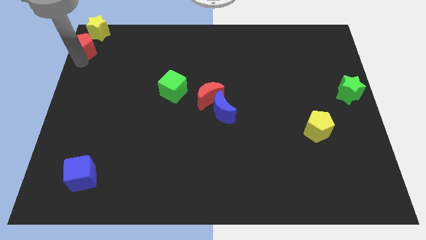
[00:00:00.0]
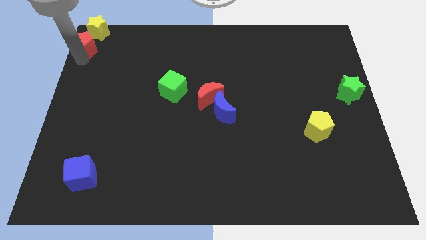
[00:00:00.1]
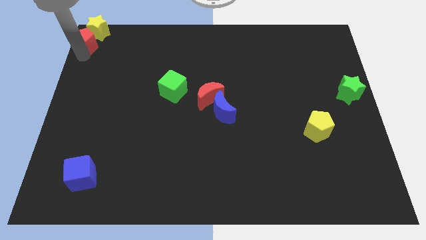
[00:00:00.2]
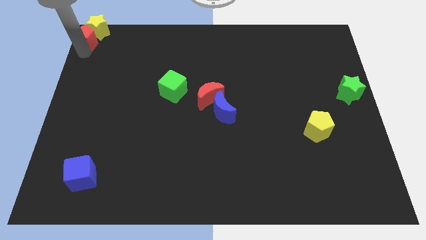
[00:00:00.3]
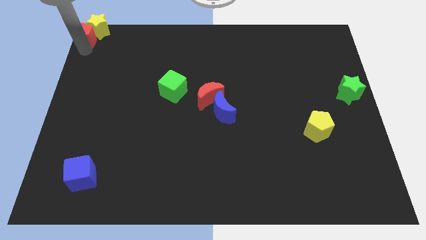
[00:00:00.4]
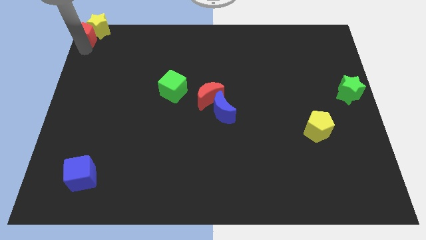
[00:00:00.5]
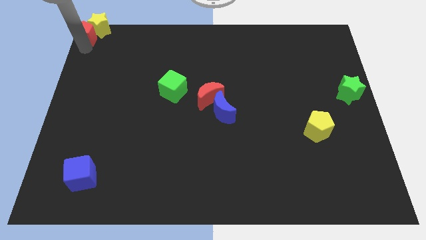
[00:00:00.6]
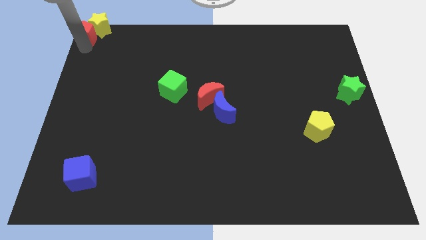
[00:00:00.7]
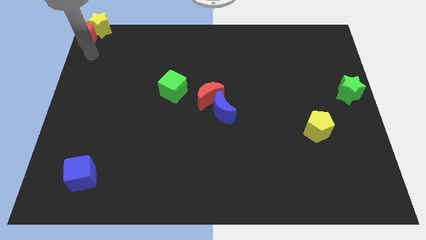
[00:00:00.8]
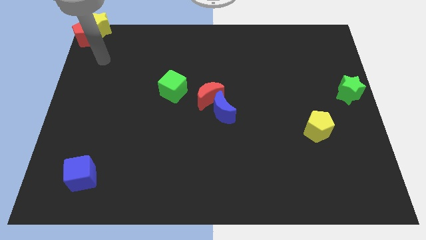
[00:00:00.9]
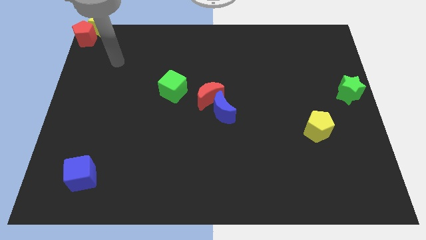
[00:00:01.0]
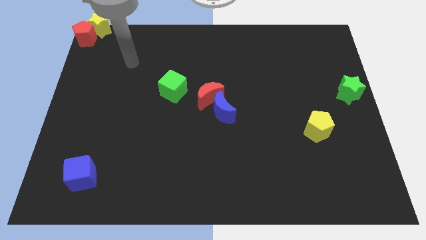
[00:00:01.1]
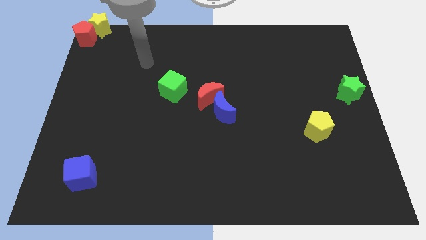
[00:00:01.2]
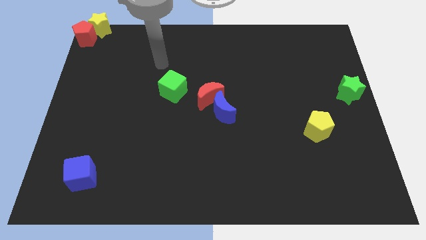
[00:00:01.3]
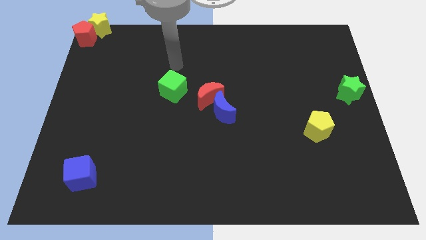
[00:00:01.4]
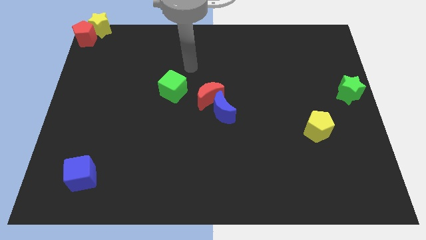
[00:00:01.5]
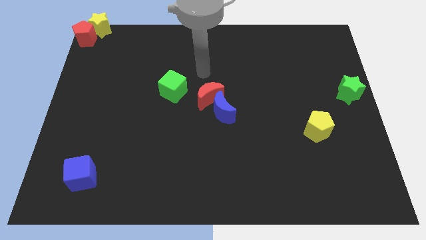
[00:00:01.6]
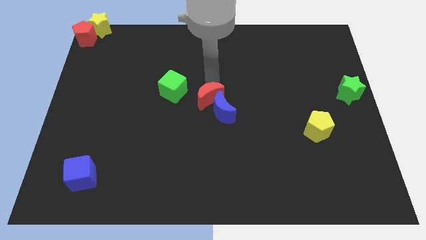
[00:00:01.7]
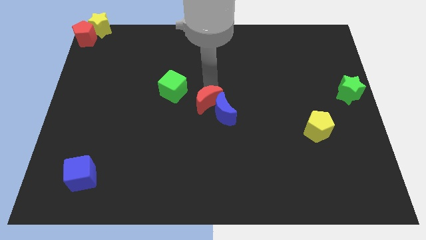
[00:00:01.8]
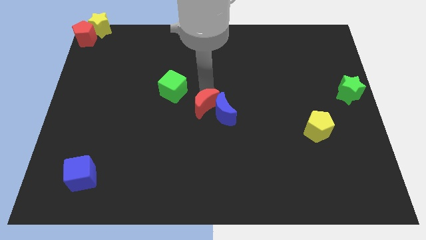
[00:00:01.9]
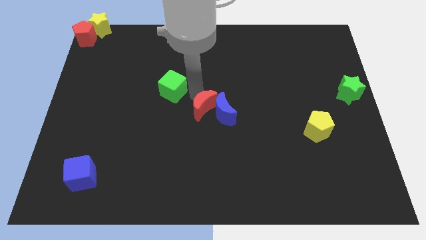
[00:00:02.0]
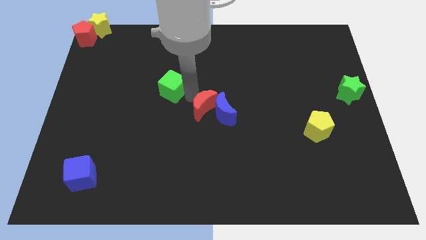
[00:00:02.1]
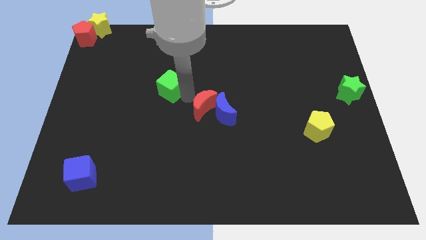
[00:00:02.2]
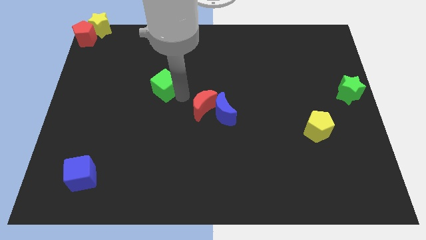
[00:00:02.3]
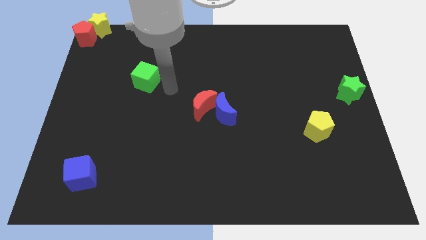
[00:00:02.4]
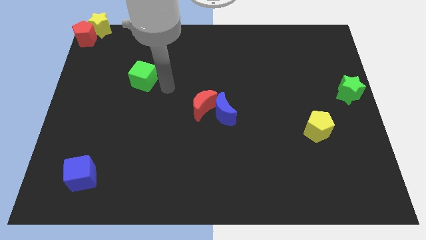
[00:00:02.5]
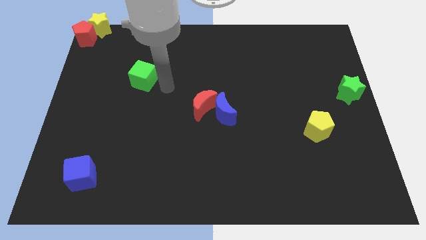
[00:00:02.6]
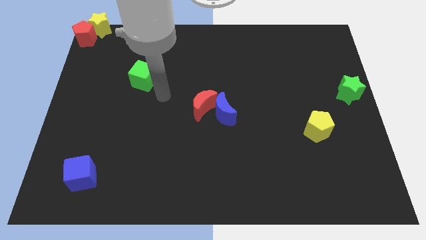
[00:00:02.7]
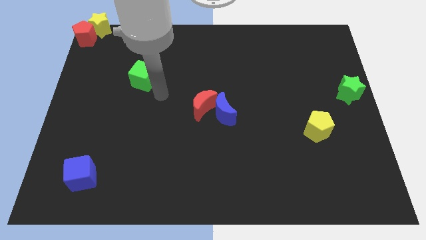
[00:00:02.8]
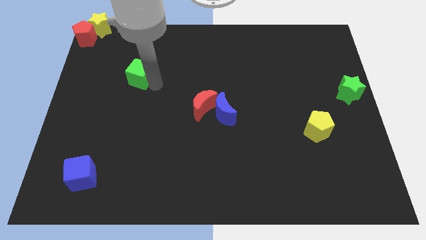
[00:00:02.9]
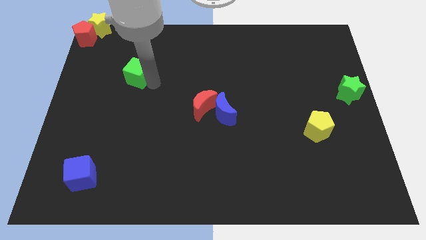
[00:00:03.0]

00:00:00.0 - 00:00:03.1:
move the green cube towards the top left of the board

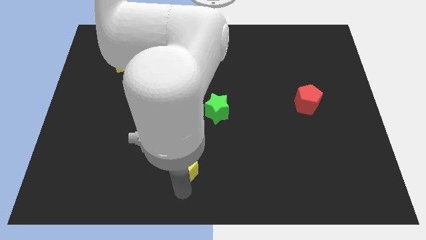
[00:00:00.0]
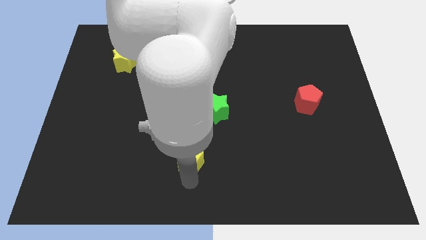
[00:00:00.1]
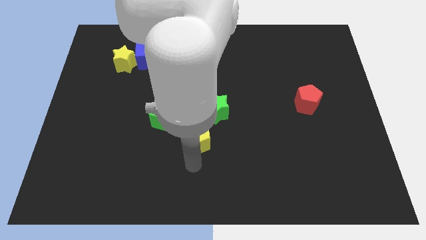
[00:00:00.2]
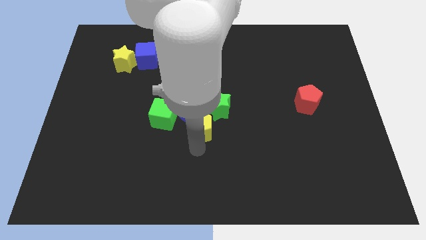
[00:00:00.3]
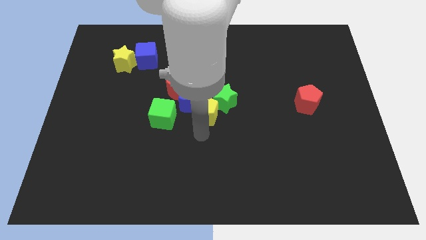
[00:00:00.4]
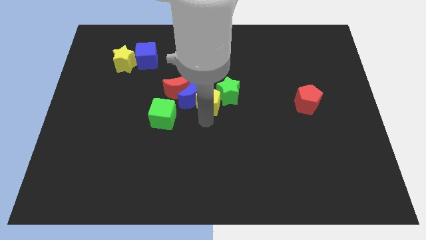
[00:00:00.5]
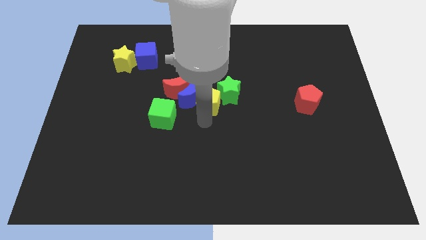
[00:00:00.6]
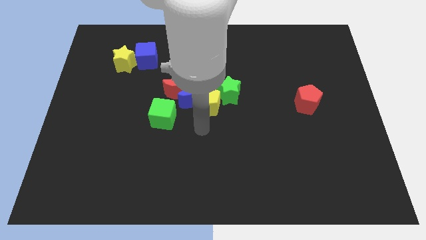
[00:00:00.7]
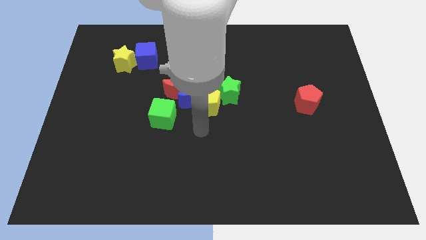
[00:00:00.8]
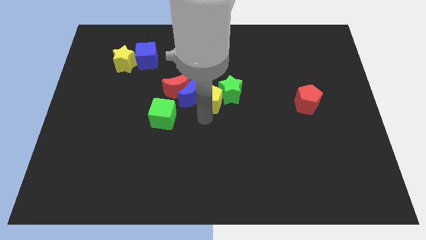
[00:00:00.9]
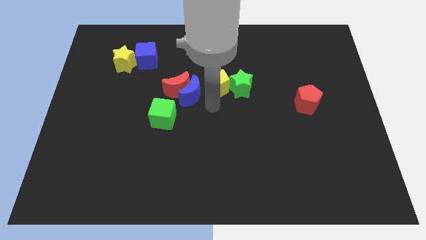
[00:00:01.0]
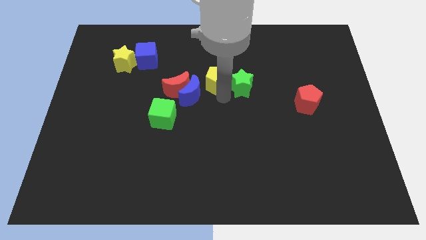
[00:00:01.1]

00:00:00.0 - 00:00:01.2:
push the yellow pentagon in between blue moon green star

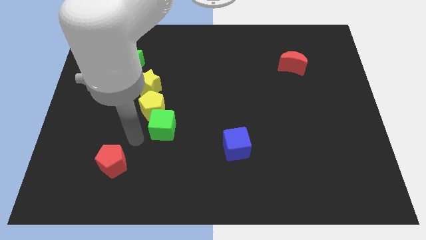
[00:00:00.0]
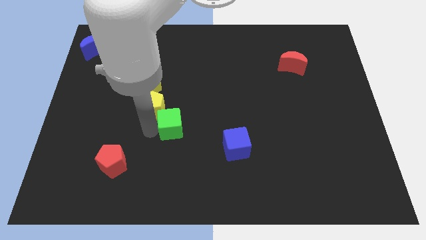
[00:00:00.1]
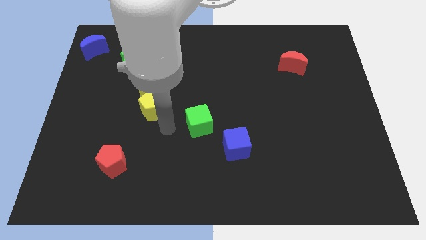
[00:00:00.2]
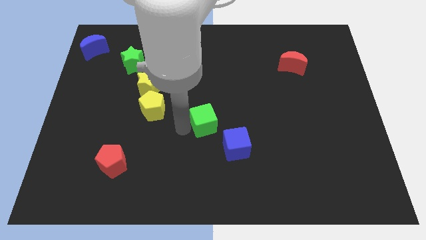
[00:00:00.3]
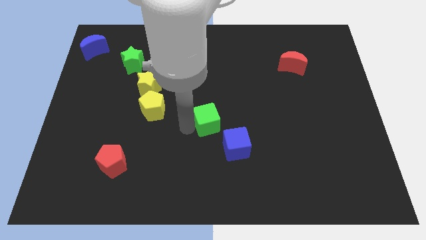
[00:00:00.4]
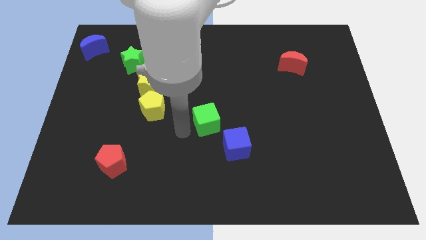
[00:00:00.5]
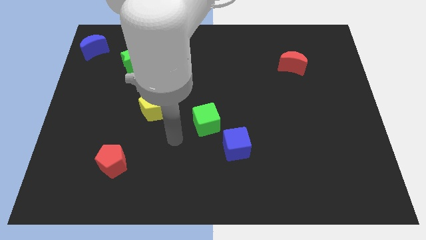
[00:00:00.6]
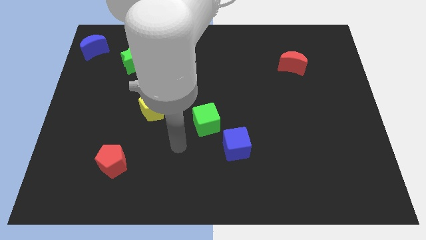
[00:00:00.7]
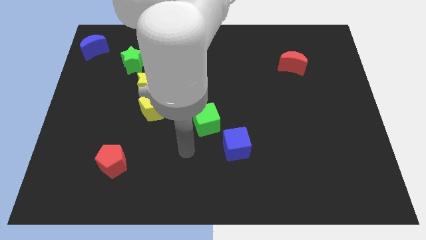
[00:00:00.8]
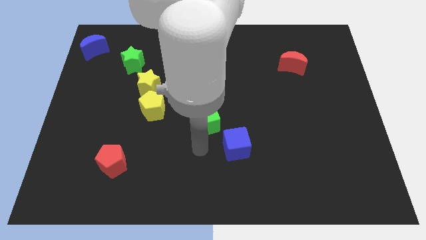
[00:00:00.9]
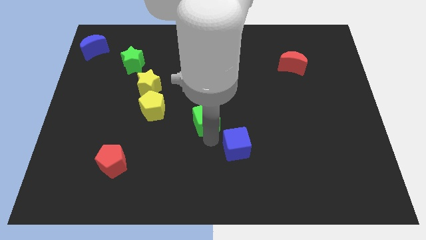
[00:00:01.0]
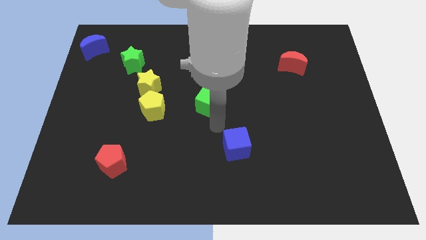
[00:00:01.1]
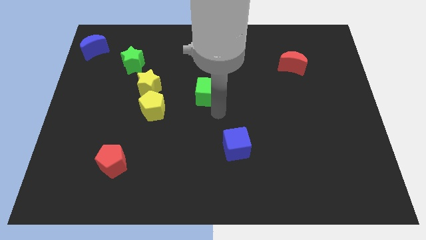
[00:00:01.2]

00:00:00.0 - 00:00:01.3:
separate the green cube from the yellow pentagon

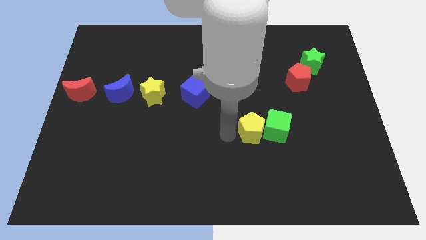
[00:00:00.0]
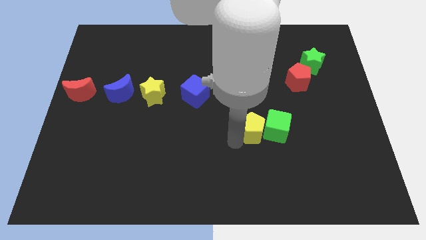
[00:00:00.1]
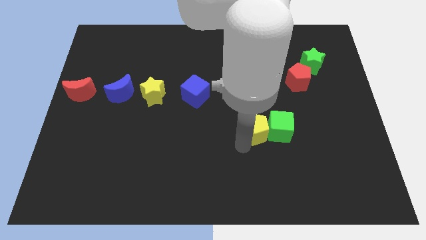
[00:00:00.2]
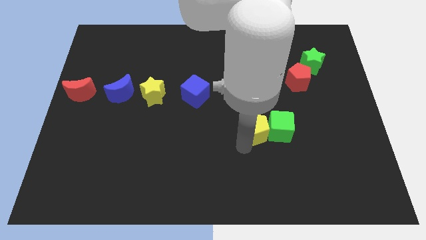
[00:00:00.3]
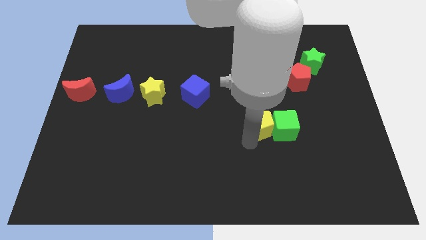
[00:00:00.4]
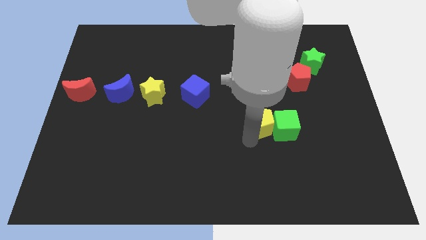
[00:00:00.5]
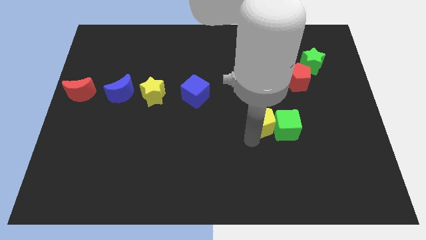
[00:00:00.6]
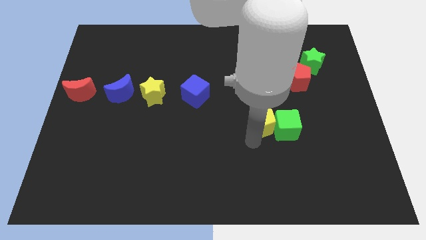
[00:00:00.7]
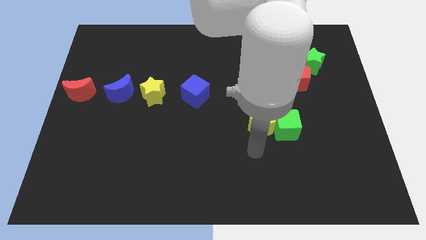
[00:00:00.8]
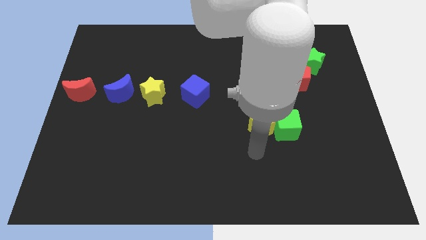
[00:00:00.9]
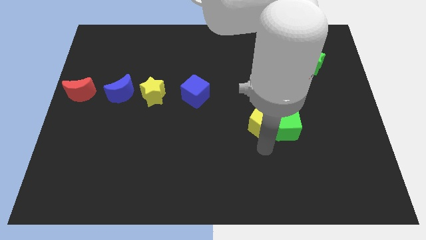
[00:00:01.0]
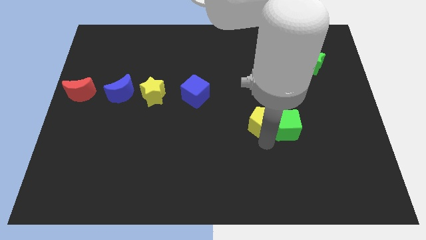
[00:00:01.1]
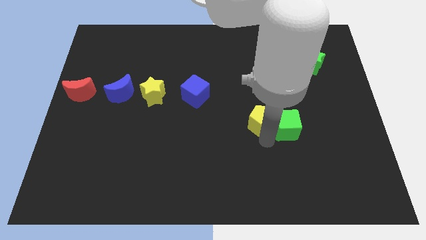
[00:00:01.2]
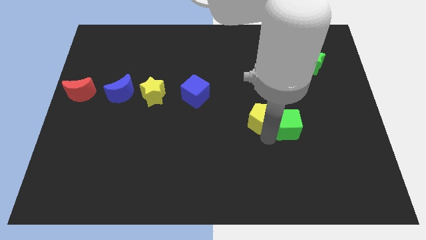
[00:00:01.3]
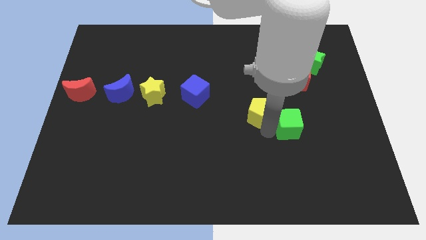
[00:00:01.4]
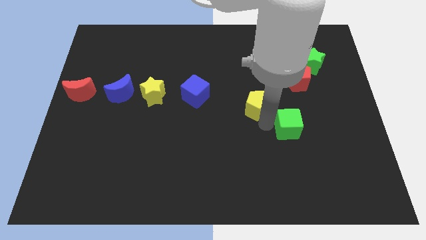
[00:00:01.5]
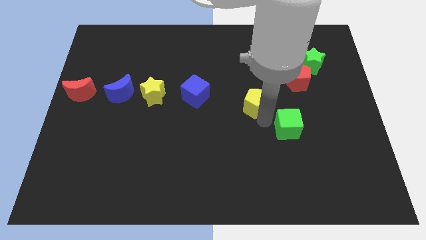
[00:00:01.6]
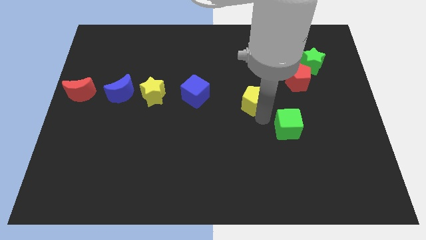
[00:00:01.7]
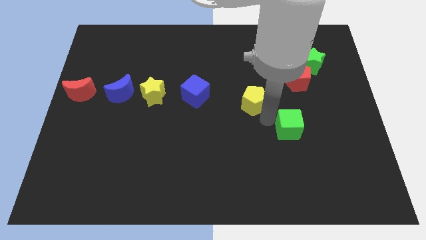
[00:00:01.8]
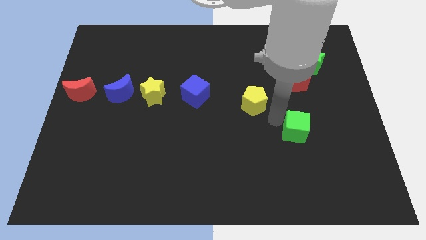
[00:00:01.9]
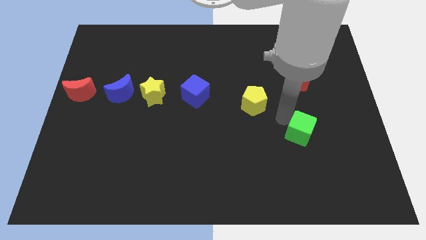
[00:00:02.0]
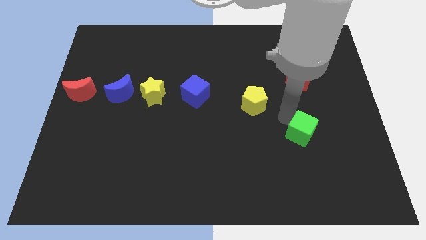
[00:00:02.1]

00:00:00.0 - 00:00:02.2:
place the yellow pentagon to the right of the blue cube

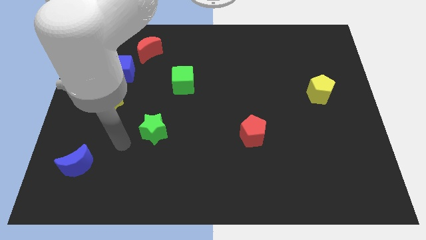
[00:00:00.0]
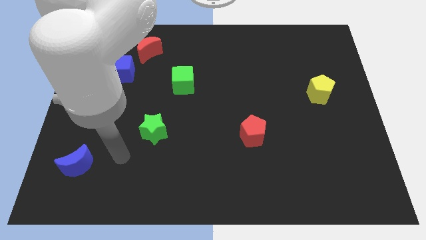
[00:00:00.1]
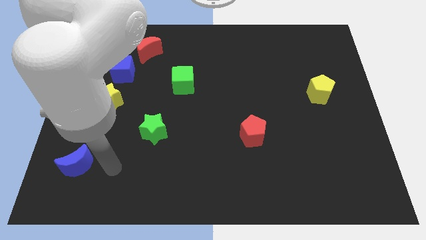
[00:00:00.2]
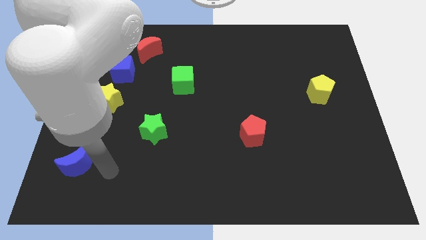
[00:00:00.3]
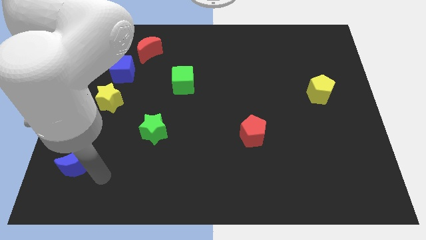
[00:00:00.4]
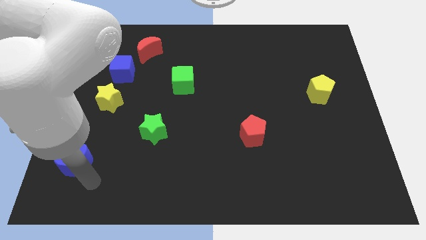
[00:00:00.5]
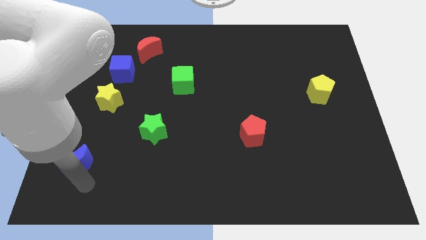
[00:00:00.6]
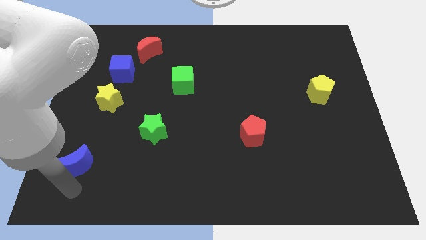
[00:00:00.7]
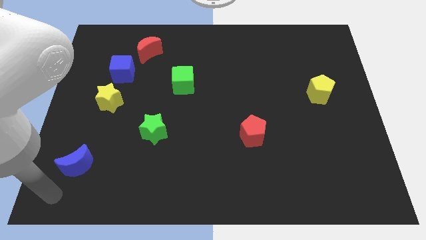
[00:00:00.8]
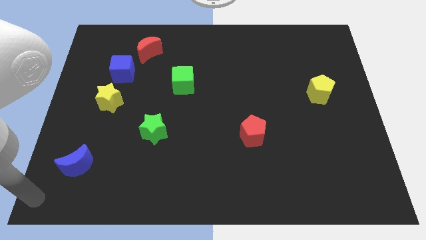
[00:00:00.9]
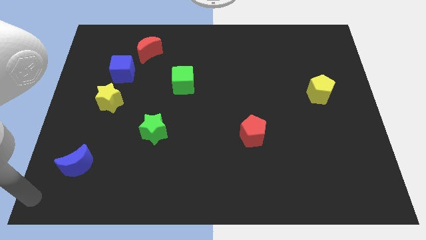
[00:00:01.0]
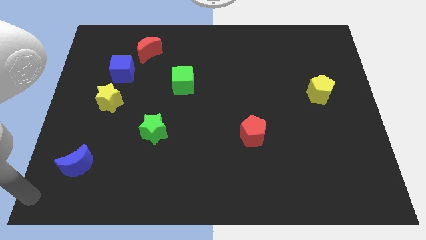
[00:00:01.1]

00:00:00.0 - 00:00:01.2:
move your arm to the left bottom of the board
